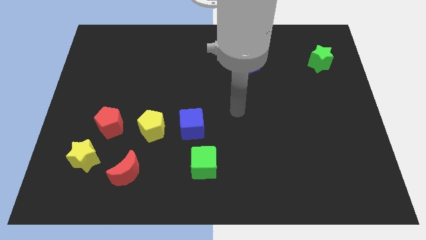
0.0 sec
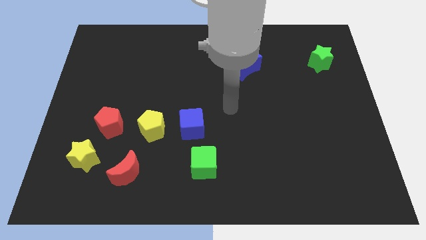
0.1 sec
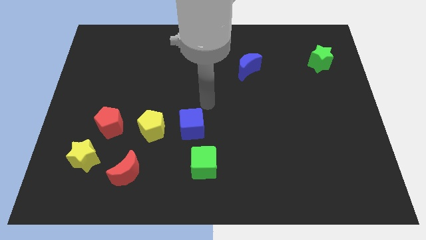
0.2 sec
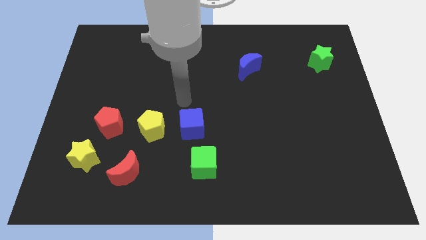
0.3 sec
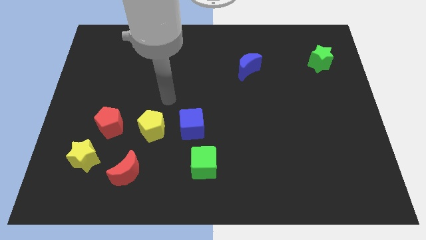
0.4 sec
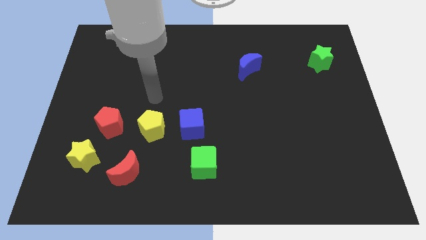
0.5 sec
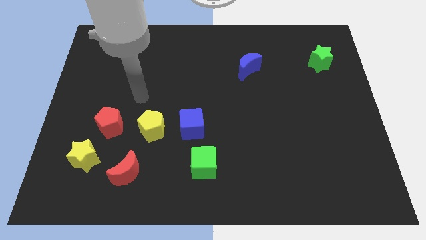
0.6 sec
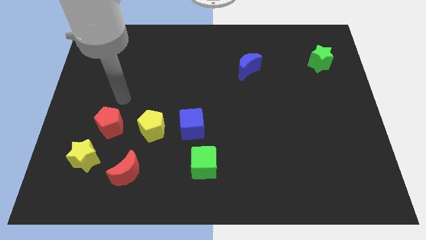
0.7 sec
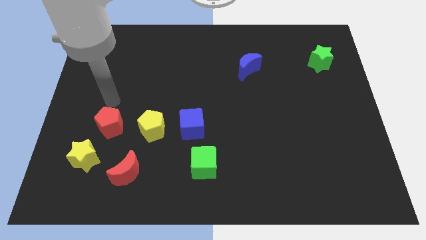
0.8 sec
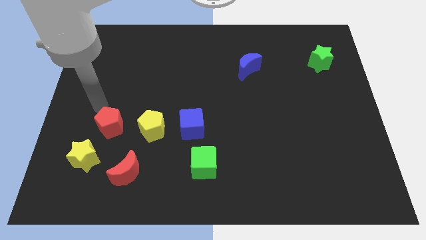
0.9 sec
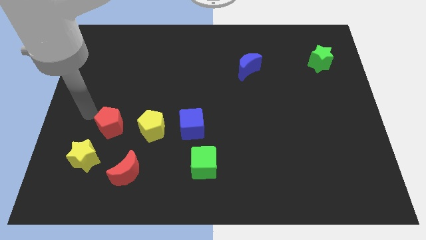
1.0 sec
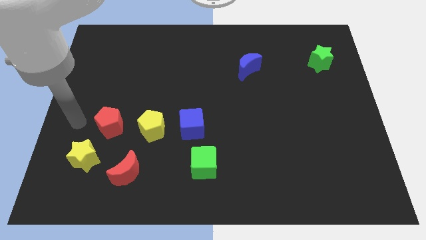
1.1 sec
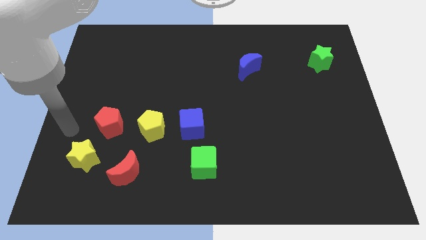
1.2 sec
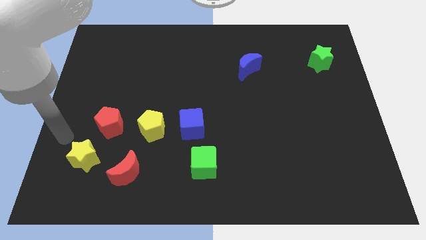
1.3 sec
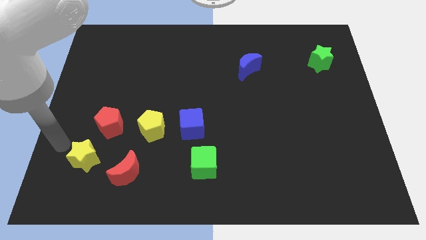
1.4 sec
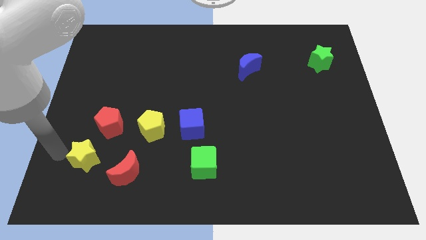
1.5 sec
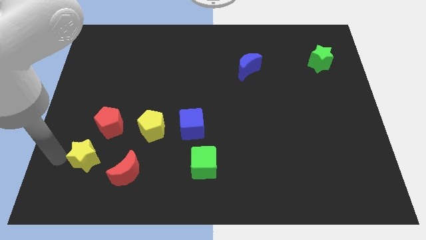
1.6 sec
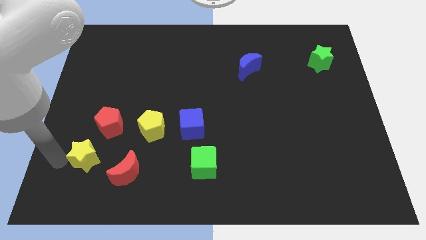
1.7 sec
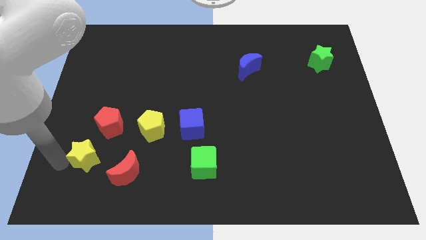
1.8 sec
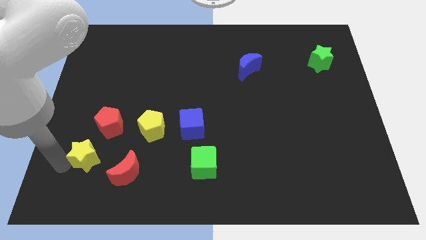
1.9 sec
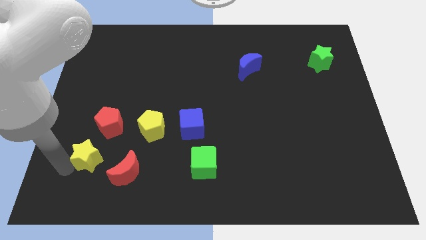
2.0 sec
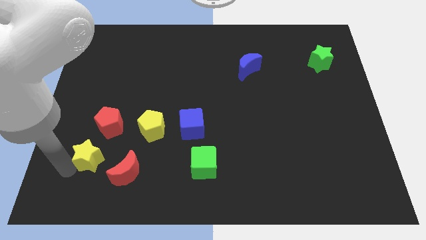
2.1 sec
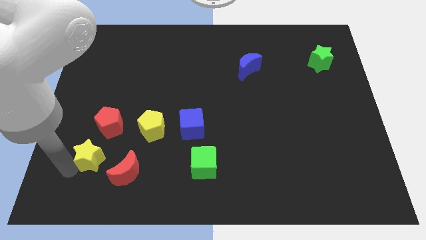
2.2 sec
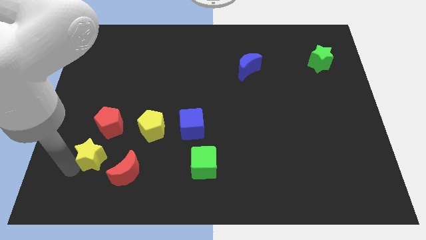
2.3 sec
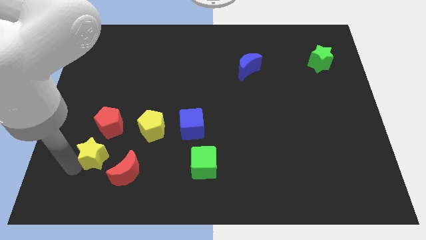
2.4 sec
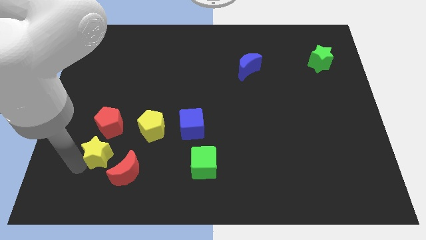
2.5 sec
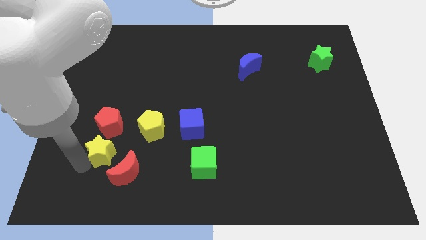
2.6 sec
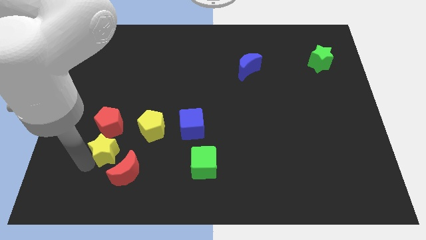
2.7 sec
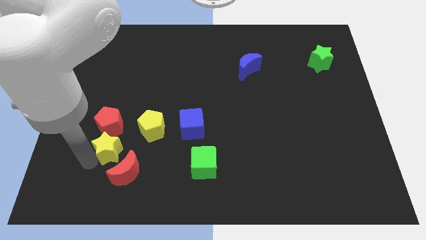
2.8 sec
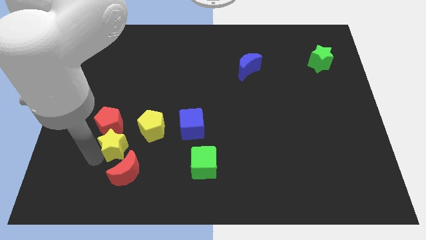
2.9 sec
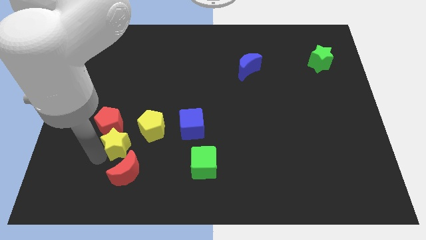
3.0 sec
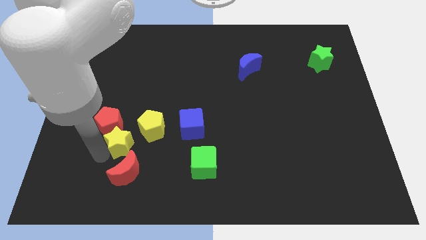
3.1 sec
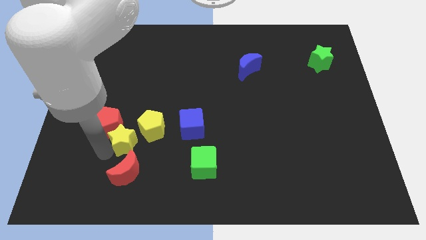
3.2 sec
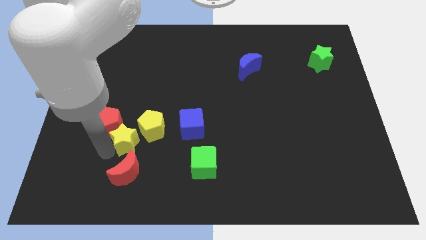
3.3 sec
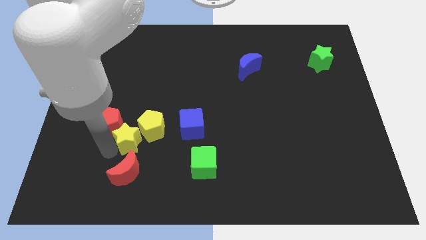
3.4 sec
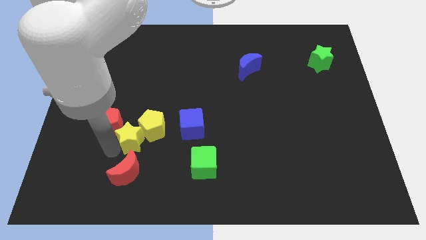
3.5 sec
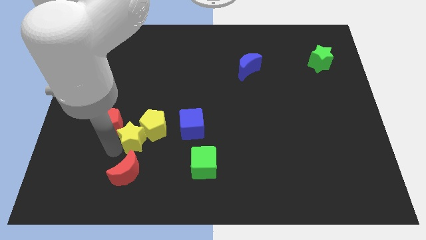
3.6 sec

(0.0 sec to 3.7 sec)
push the yellow star next to the yellow pentagon

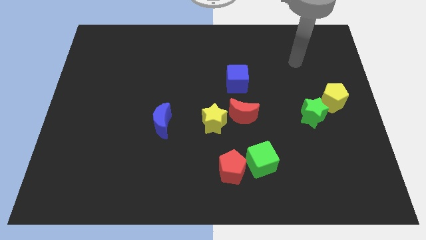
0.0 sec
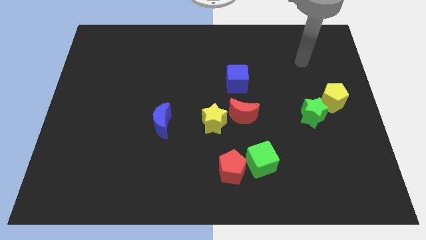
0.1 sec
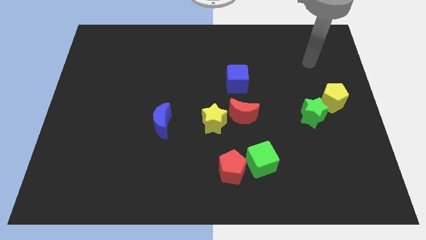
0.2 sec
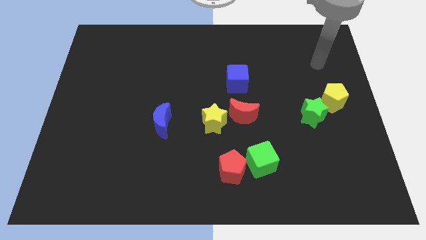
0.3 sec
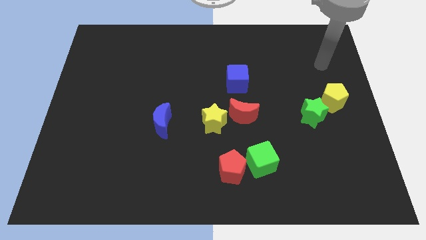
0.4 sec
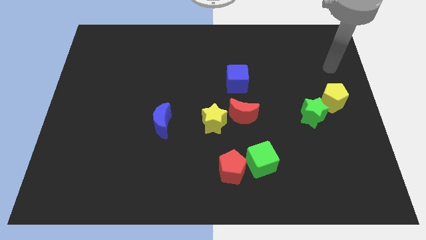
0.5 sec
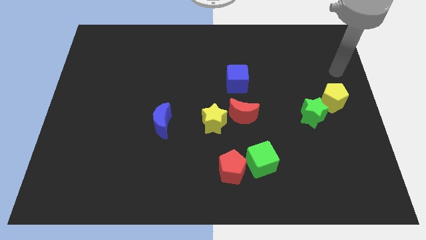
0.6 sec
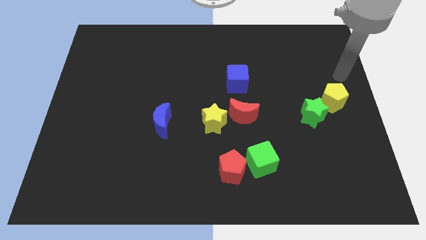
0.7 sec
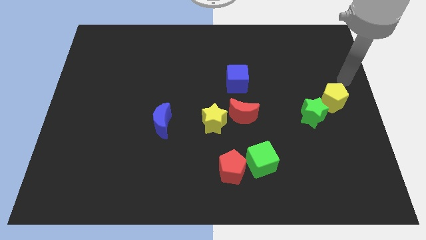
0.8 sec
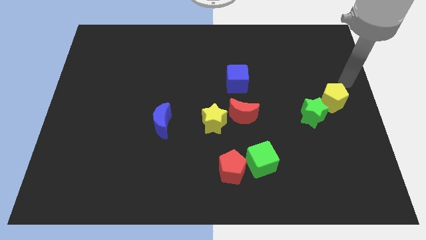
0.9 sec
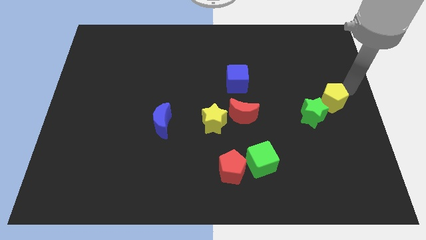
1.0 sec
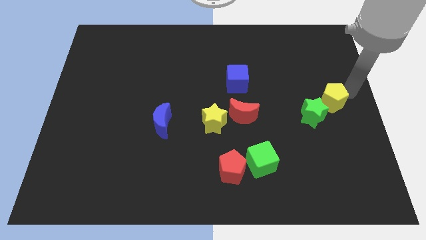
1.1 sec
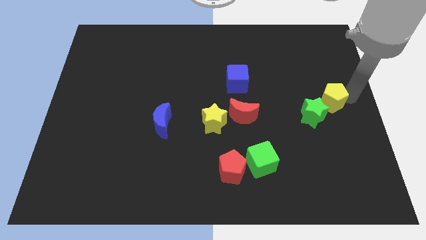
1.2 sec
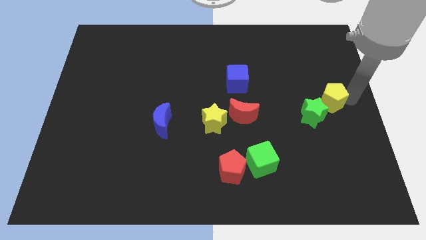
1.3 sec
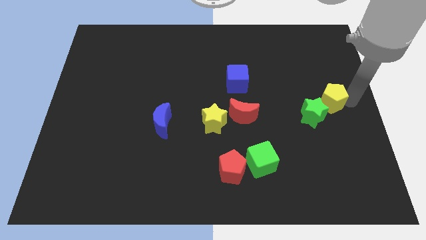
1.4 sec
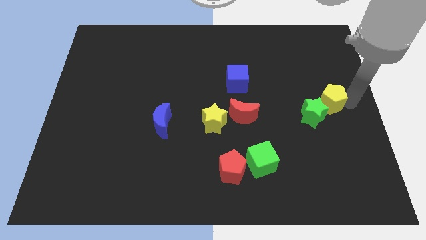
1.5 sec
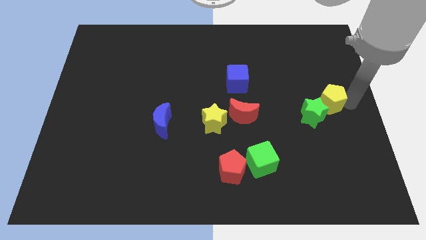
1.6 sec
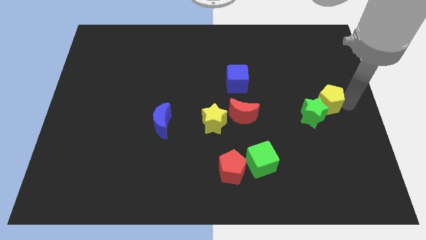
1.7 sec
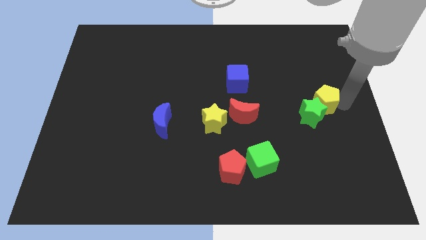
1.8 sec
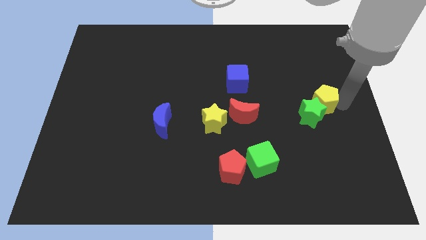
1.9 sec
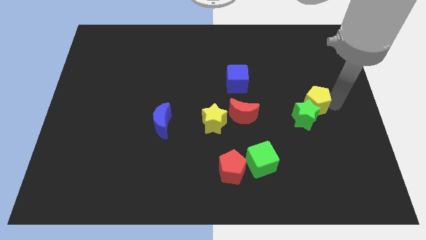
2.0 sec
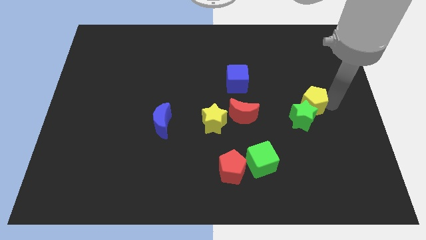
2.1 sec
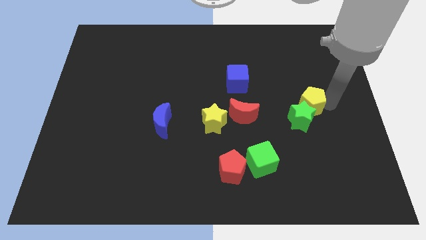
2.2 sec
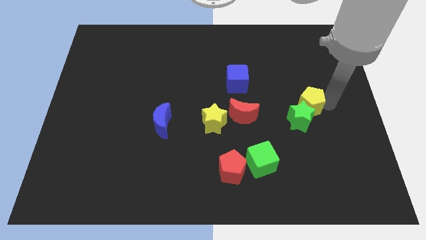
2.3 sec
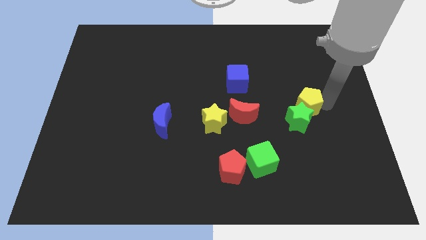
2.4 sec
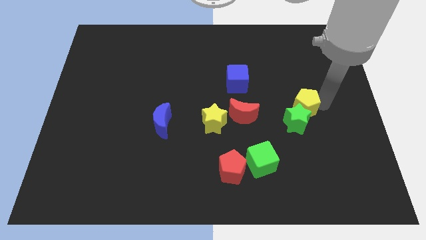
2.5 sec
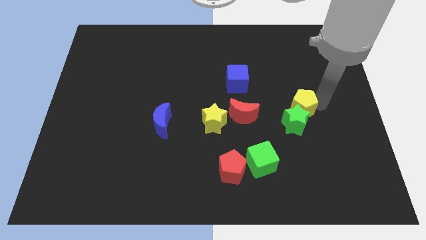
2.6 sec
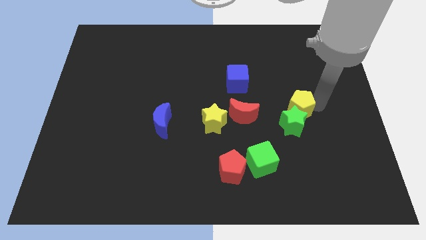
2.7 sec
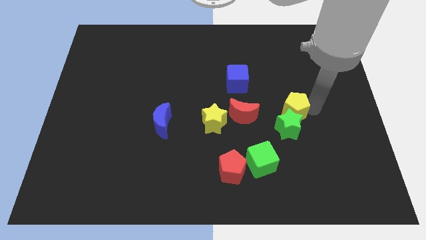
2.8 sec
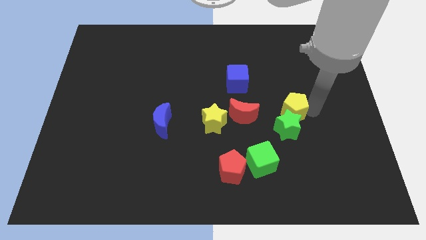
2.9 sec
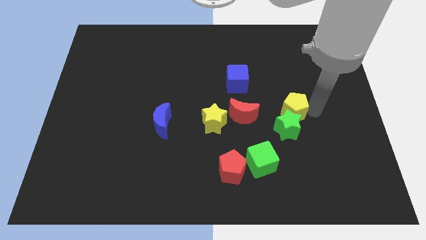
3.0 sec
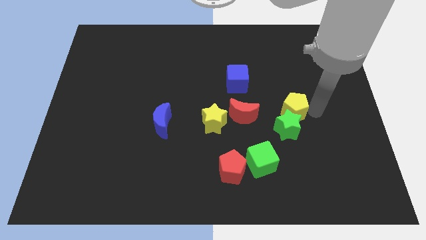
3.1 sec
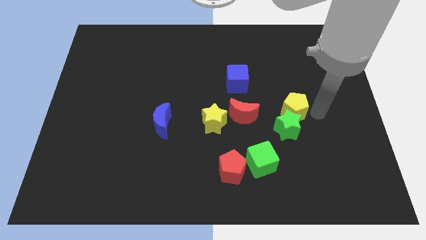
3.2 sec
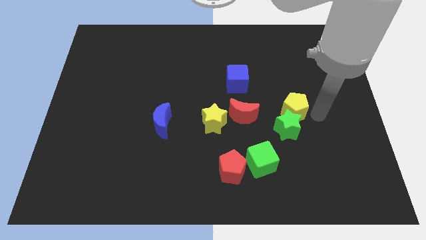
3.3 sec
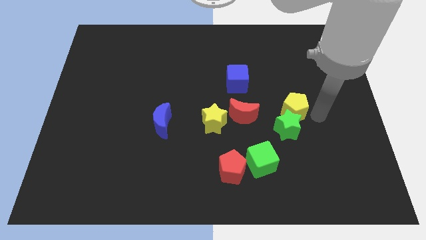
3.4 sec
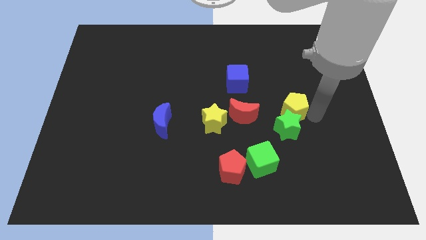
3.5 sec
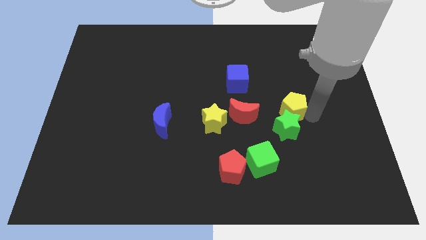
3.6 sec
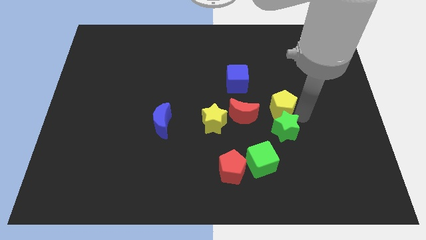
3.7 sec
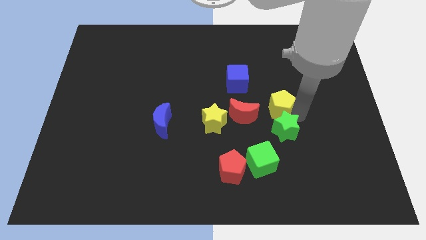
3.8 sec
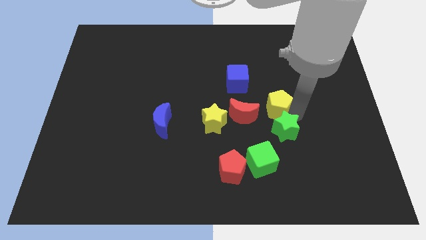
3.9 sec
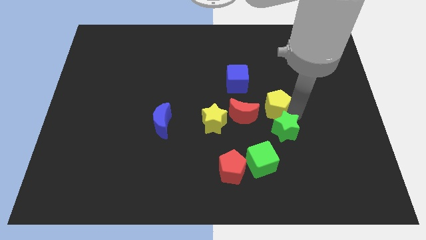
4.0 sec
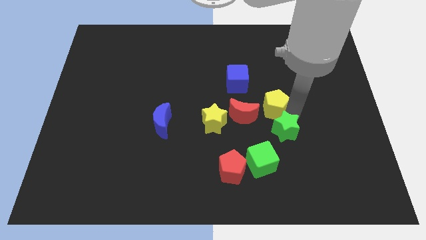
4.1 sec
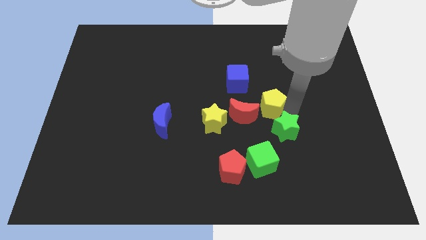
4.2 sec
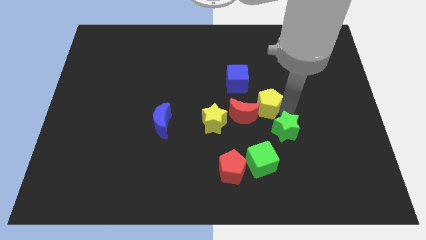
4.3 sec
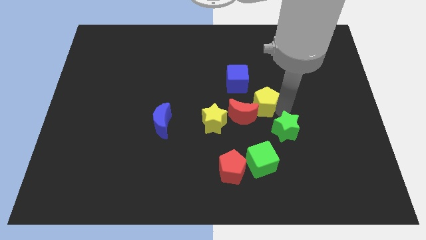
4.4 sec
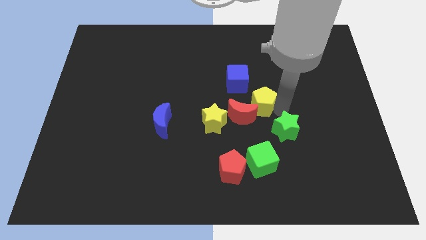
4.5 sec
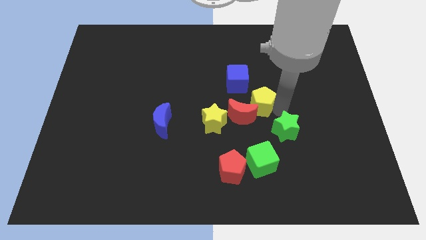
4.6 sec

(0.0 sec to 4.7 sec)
push the yellow pentagon close to the red moon

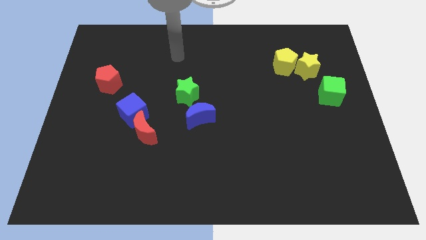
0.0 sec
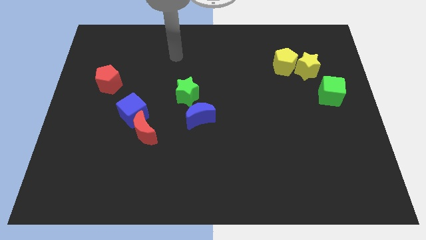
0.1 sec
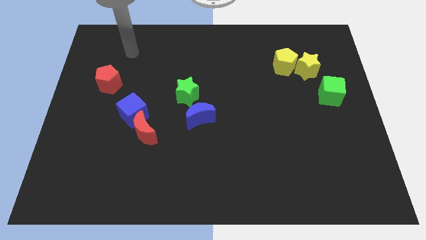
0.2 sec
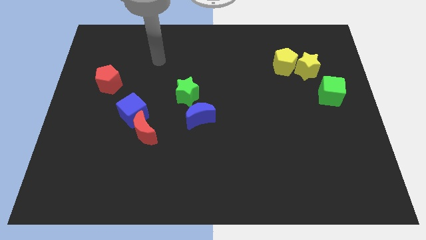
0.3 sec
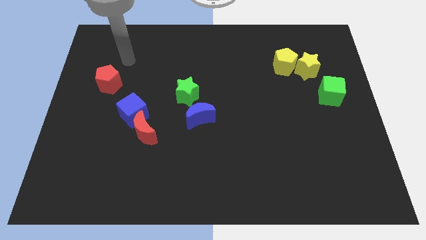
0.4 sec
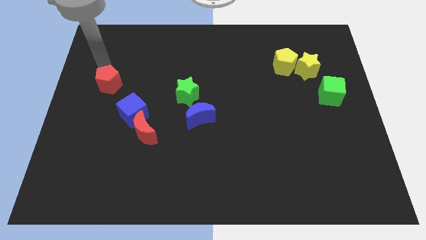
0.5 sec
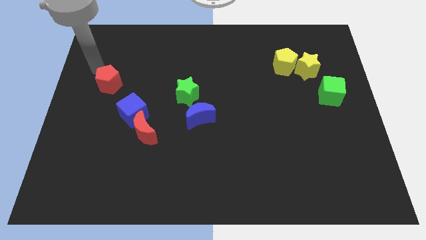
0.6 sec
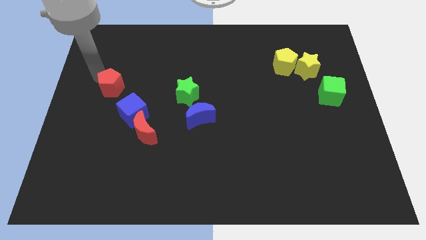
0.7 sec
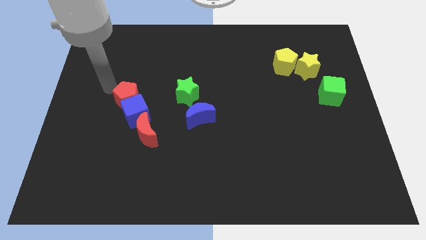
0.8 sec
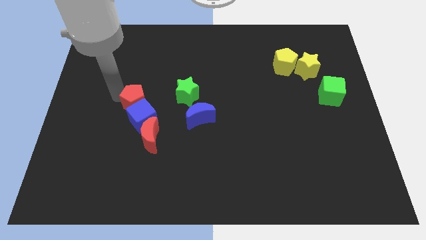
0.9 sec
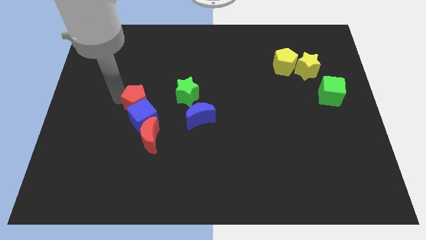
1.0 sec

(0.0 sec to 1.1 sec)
push the red pentagon to the blue cube
